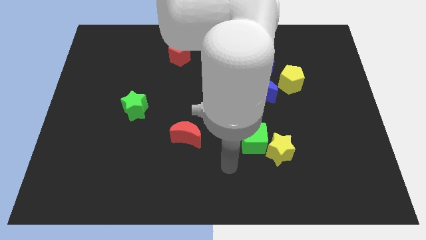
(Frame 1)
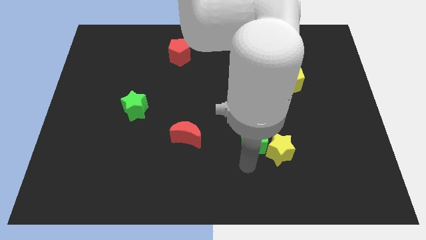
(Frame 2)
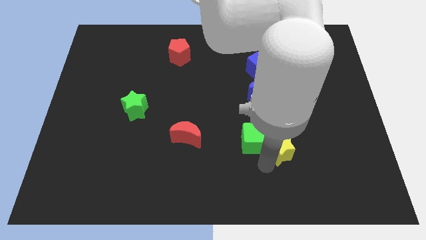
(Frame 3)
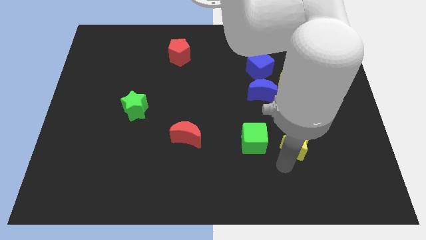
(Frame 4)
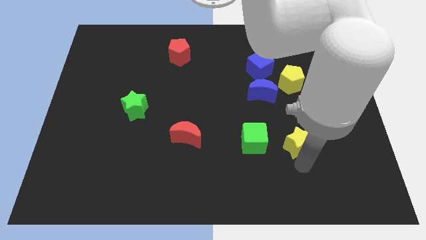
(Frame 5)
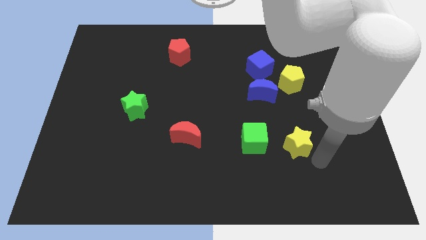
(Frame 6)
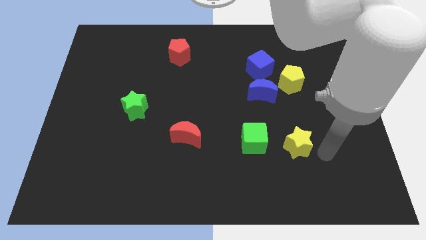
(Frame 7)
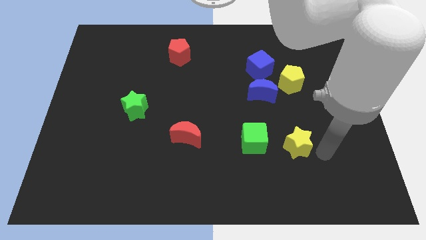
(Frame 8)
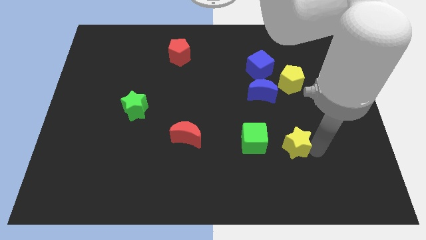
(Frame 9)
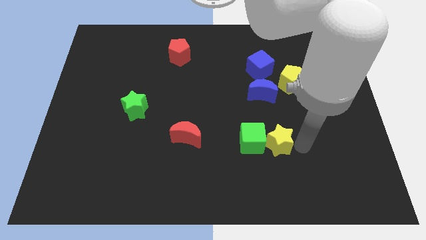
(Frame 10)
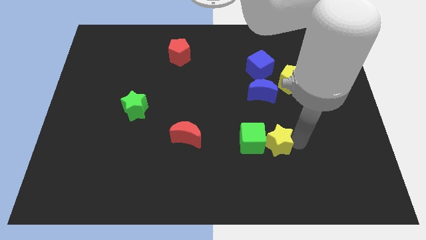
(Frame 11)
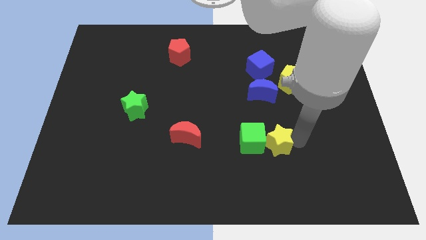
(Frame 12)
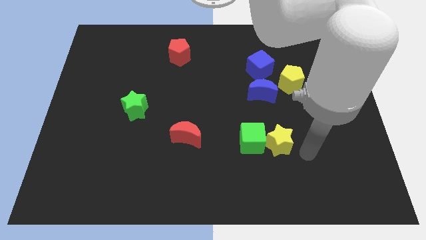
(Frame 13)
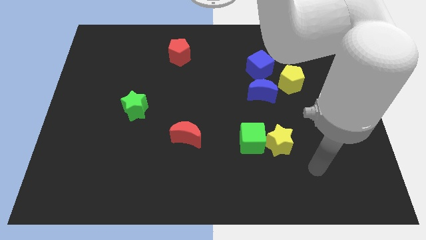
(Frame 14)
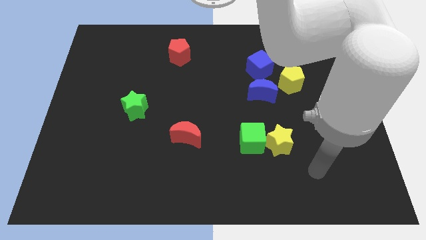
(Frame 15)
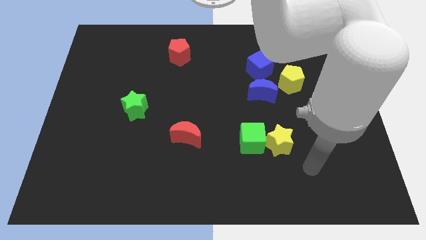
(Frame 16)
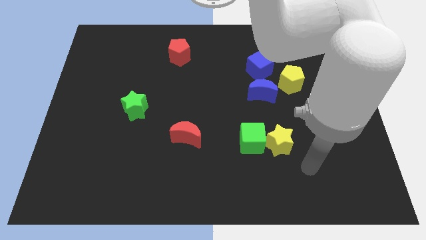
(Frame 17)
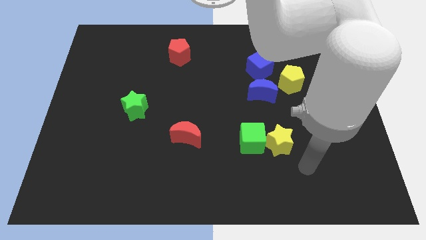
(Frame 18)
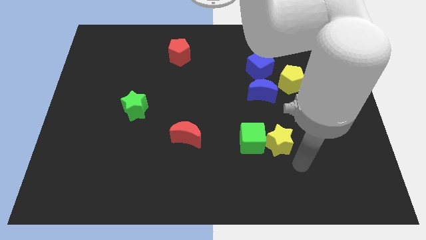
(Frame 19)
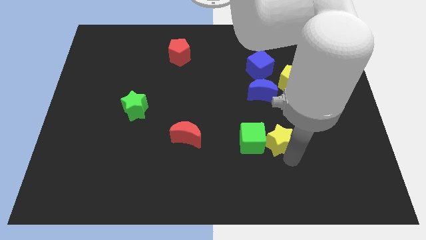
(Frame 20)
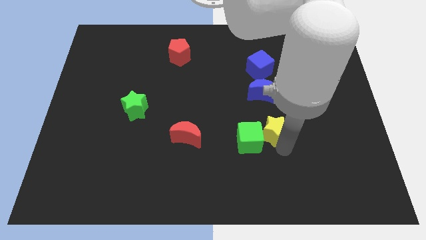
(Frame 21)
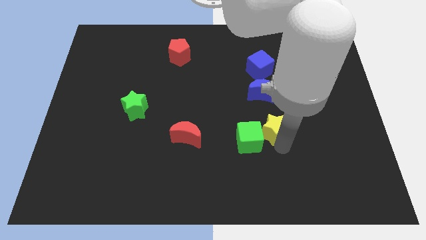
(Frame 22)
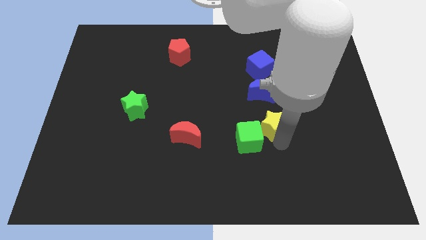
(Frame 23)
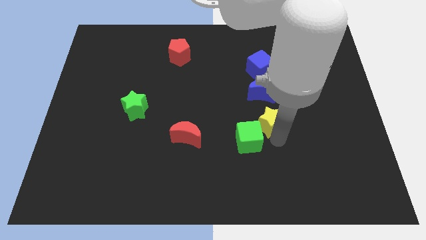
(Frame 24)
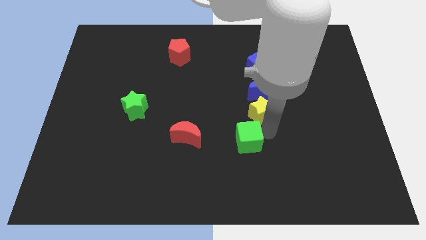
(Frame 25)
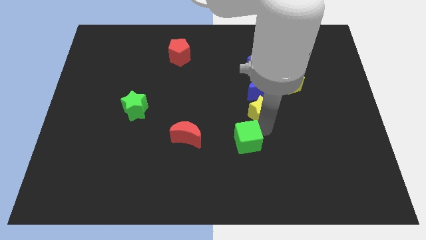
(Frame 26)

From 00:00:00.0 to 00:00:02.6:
push yellow star below blue crescent

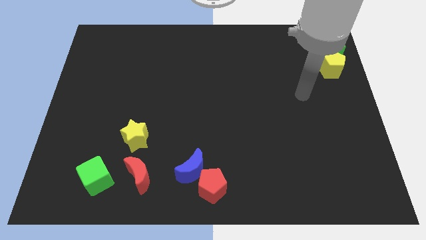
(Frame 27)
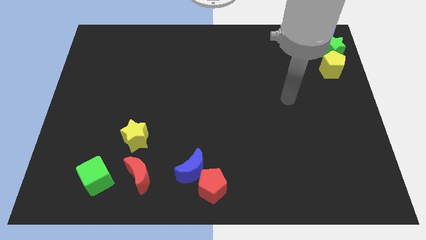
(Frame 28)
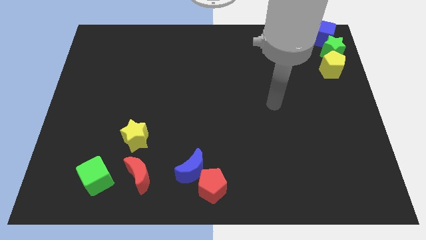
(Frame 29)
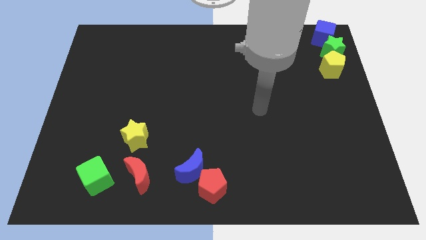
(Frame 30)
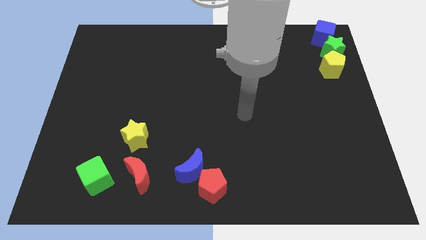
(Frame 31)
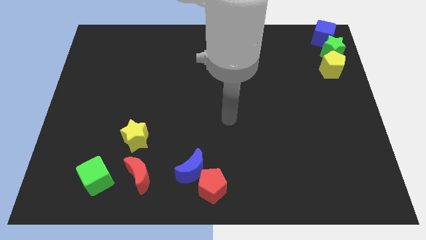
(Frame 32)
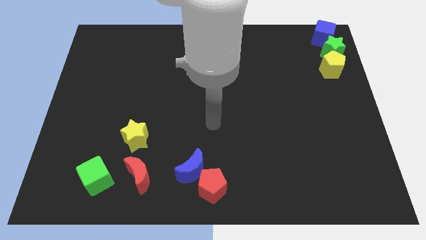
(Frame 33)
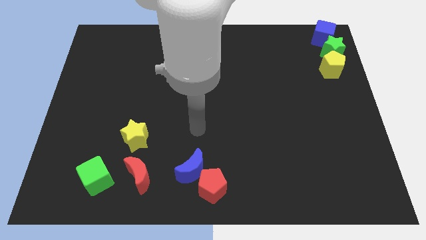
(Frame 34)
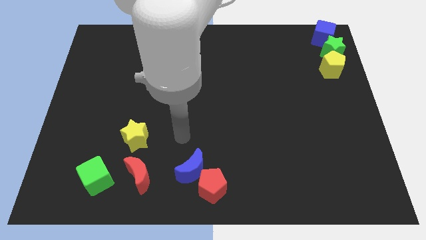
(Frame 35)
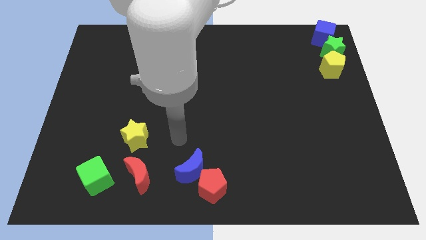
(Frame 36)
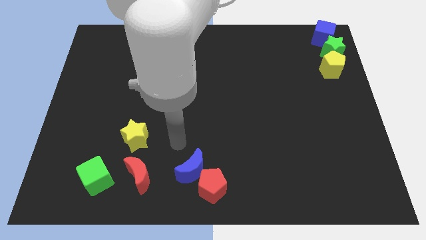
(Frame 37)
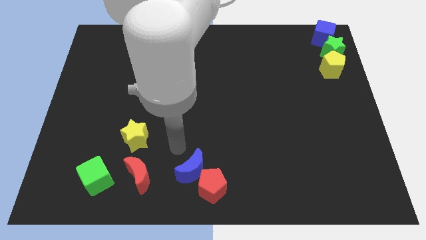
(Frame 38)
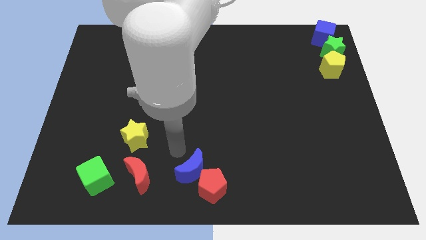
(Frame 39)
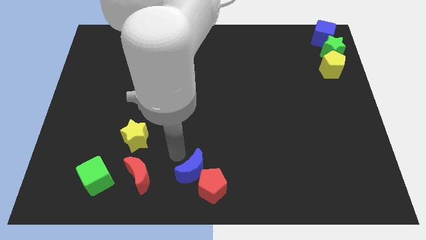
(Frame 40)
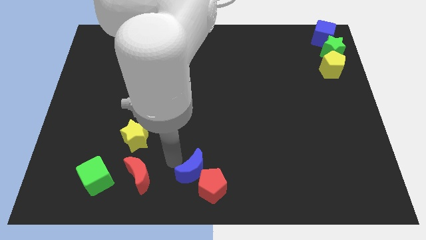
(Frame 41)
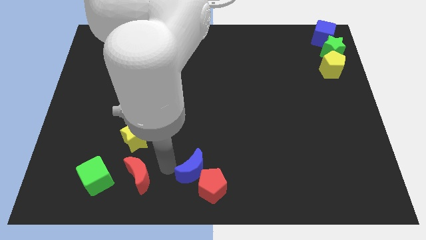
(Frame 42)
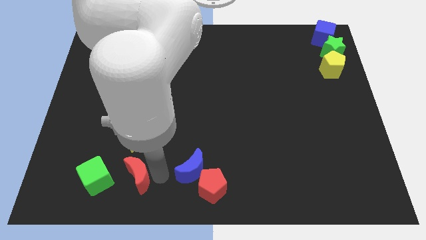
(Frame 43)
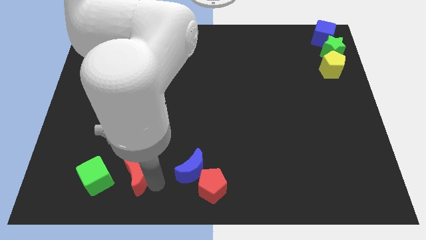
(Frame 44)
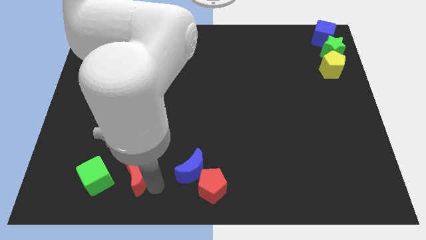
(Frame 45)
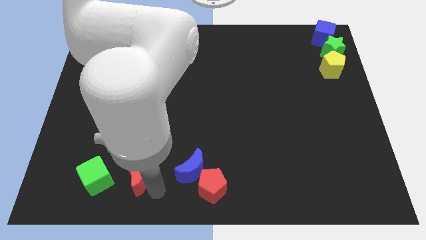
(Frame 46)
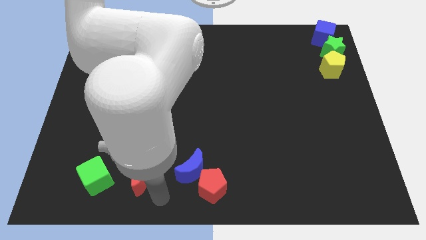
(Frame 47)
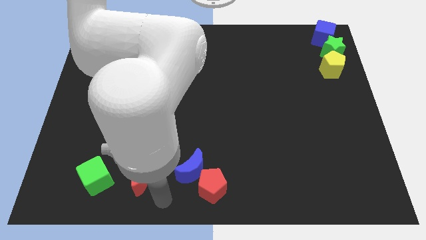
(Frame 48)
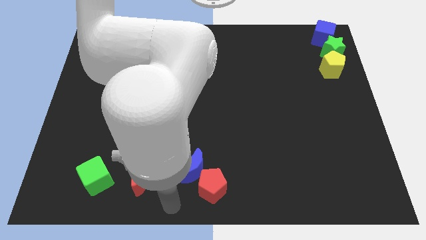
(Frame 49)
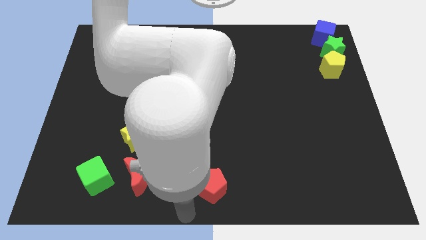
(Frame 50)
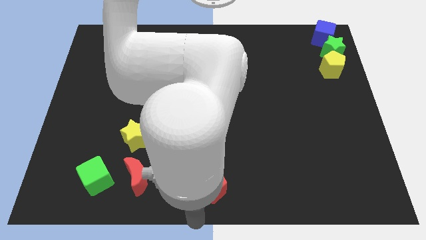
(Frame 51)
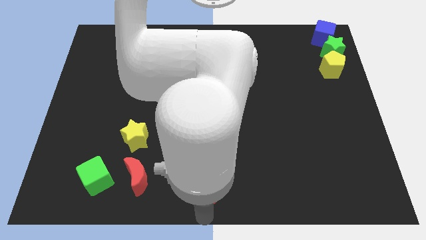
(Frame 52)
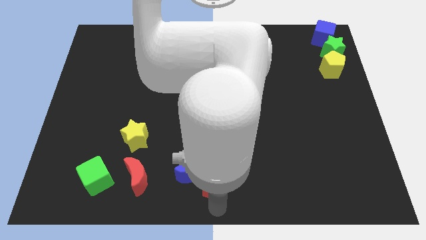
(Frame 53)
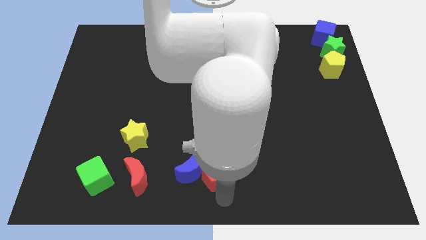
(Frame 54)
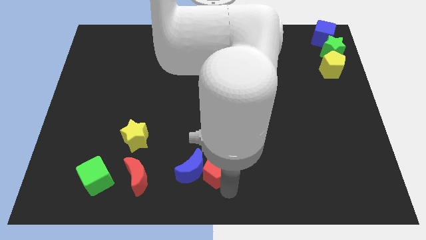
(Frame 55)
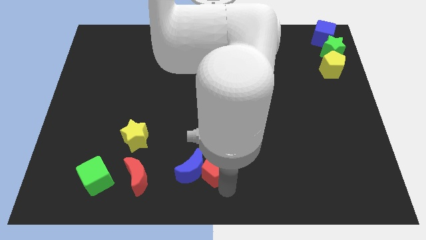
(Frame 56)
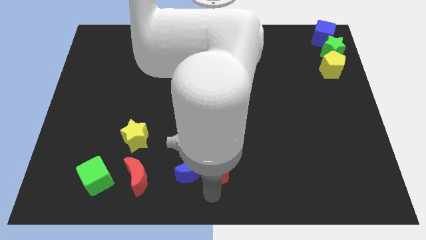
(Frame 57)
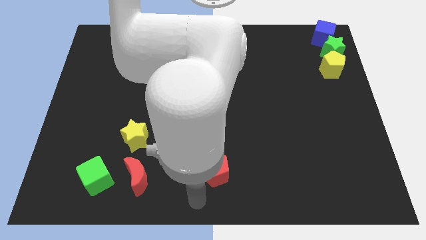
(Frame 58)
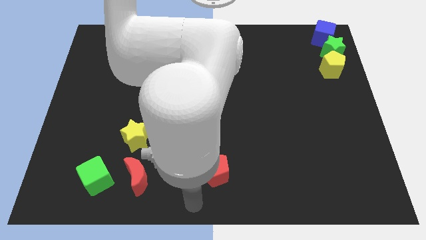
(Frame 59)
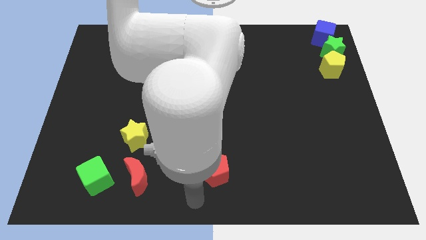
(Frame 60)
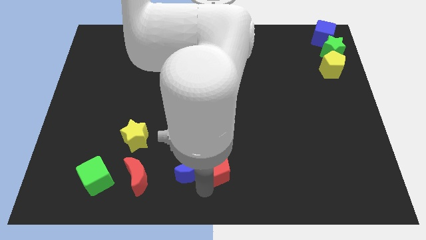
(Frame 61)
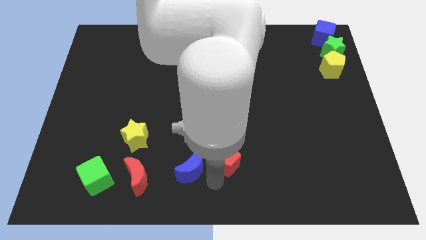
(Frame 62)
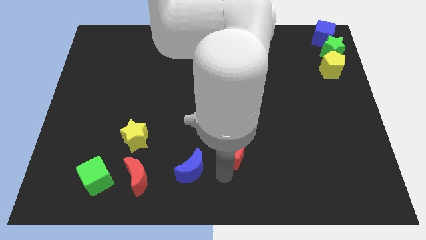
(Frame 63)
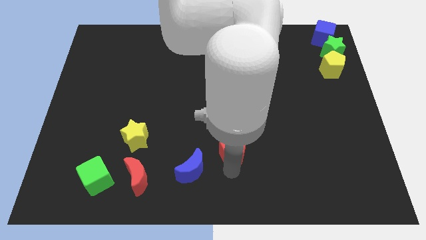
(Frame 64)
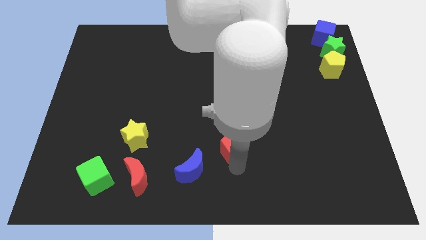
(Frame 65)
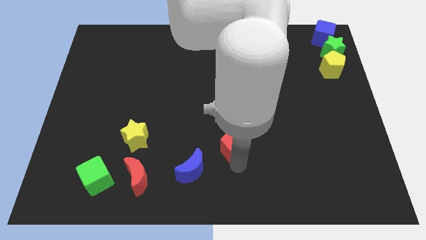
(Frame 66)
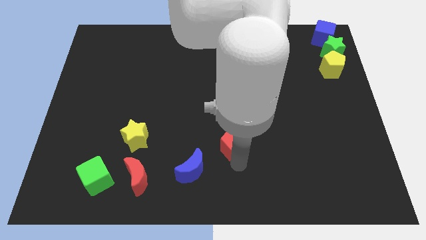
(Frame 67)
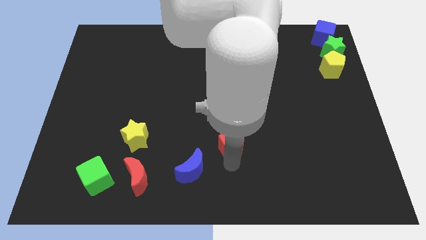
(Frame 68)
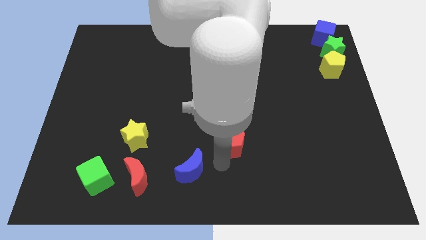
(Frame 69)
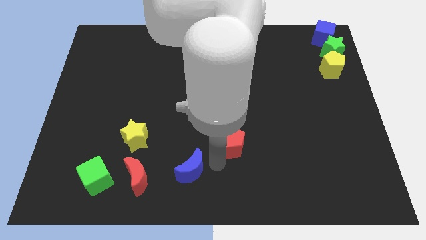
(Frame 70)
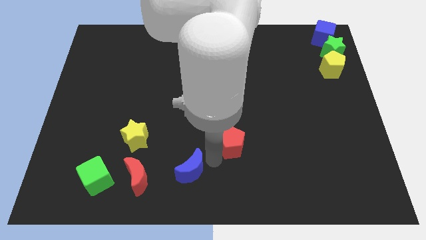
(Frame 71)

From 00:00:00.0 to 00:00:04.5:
move the red pentagon to the top right of the blue crescent

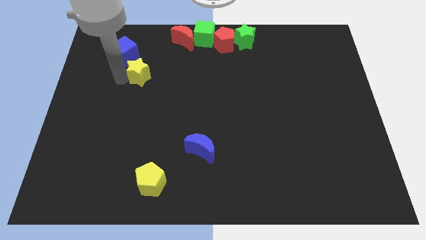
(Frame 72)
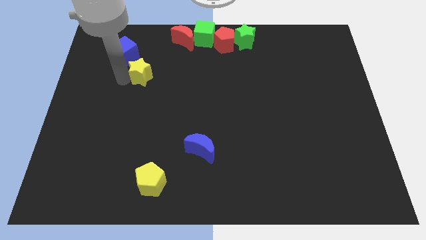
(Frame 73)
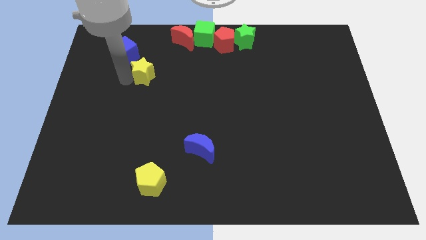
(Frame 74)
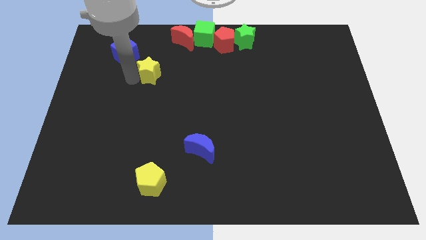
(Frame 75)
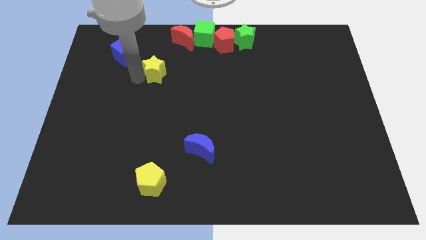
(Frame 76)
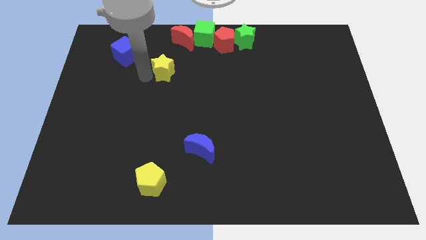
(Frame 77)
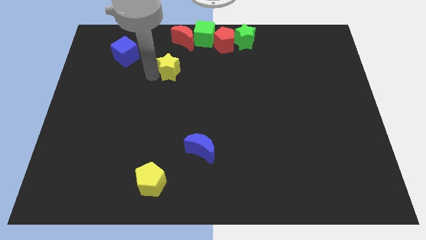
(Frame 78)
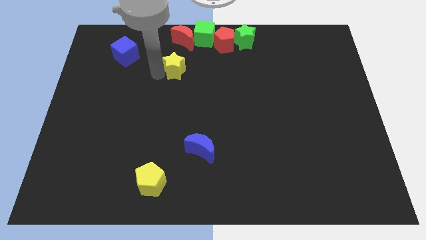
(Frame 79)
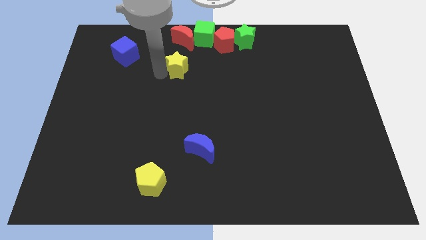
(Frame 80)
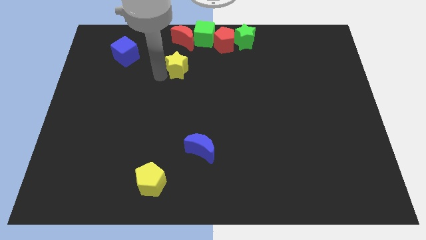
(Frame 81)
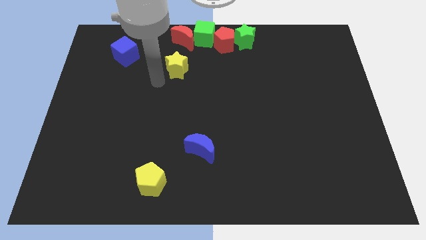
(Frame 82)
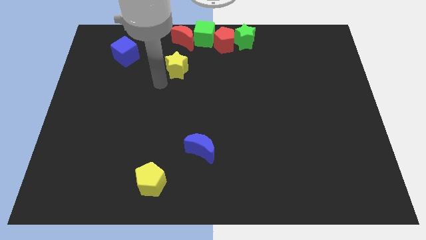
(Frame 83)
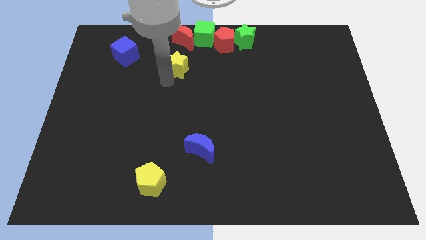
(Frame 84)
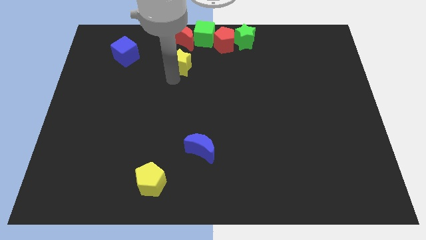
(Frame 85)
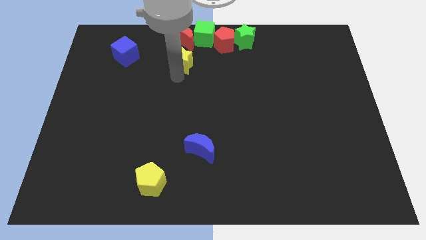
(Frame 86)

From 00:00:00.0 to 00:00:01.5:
place the yellow star below the red moon

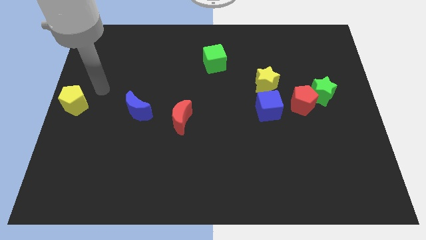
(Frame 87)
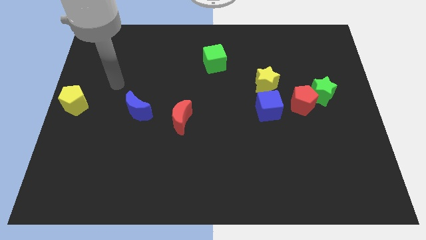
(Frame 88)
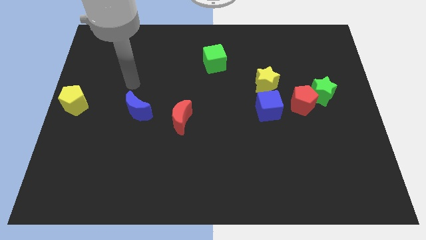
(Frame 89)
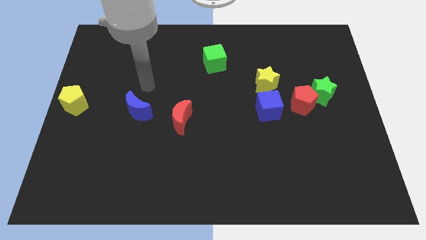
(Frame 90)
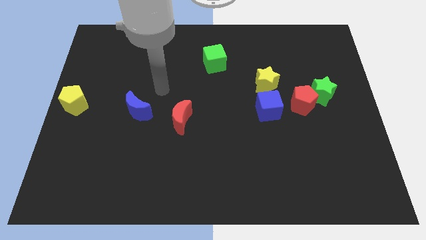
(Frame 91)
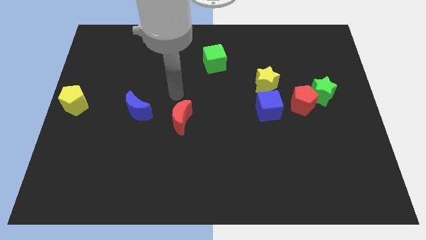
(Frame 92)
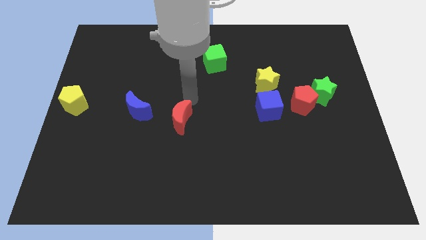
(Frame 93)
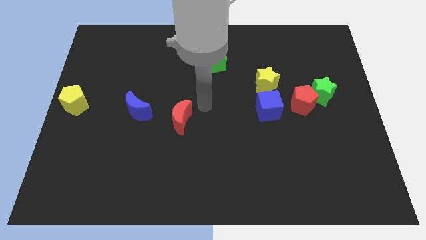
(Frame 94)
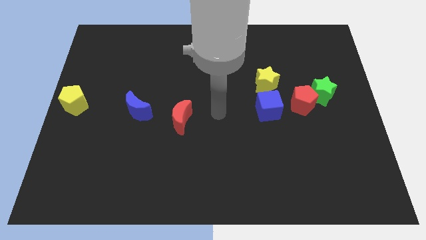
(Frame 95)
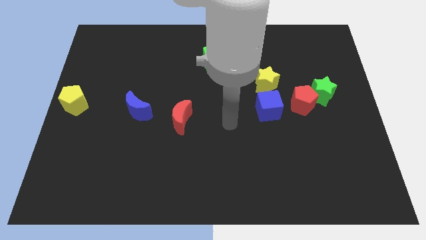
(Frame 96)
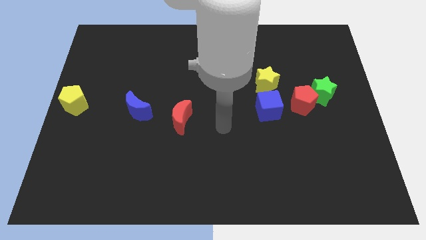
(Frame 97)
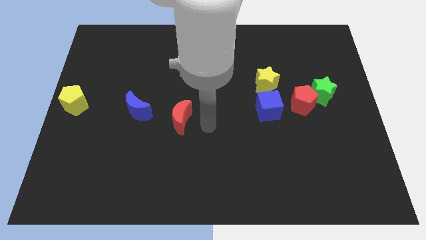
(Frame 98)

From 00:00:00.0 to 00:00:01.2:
move your arm towards the red pentagon
